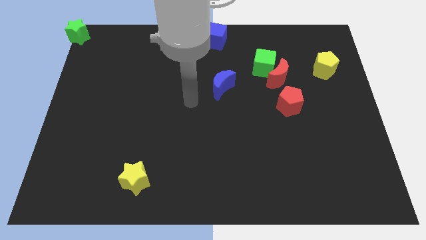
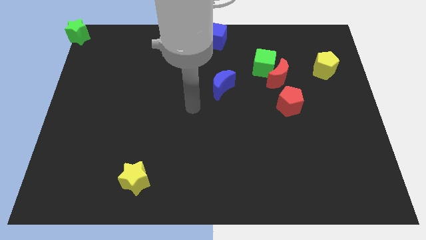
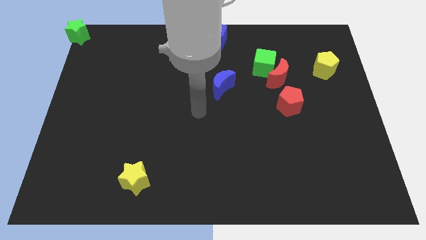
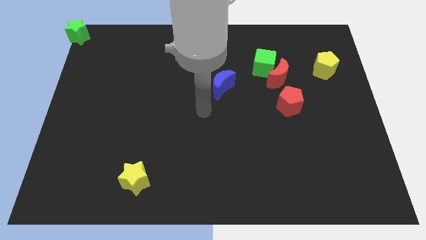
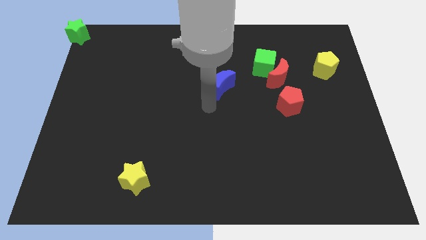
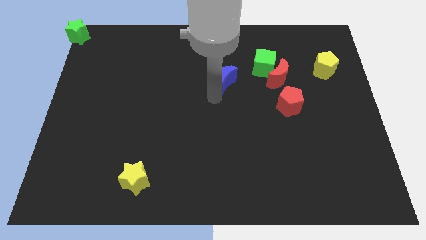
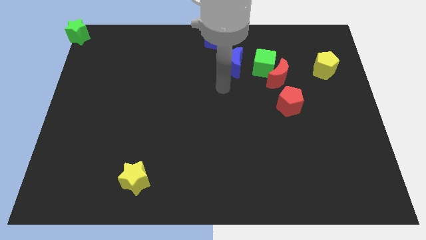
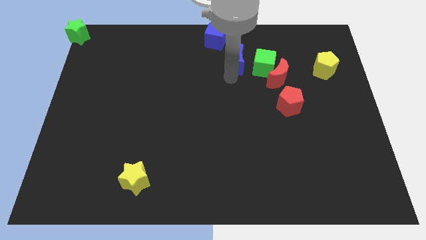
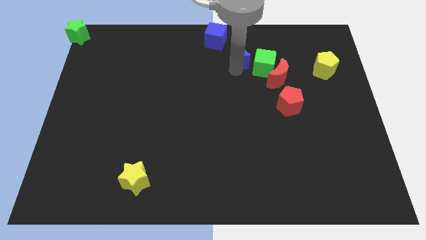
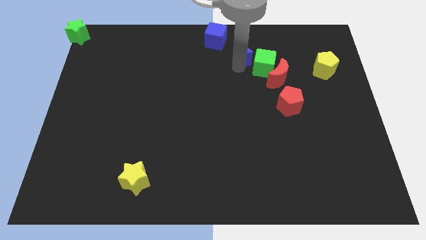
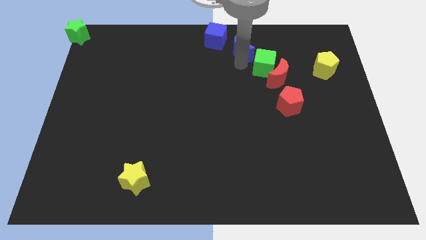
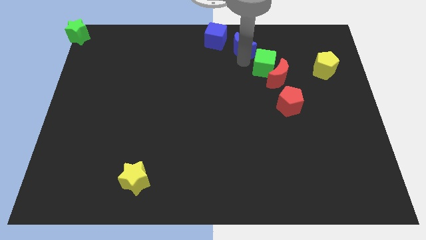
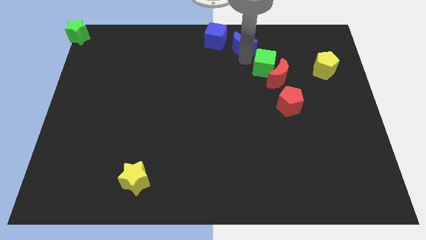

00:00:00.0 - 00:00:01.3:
push the blue crescent to the bottom right of the blue cube

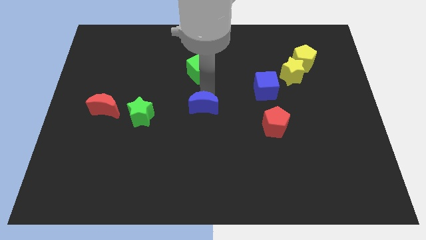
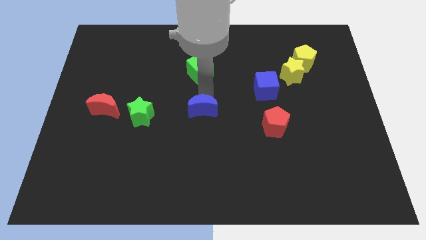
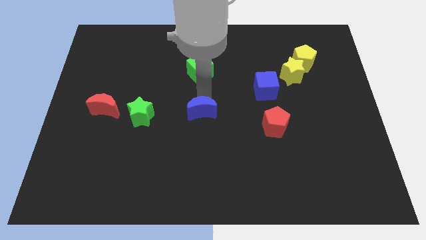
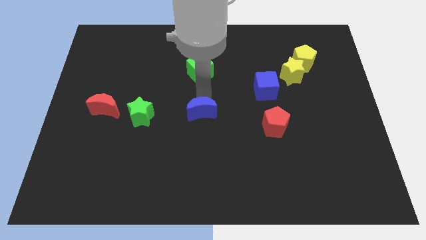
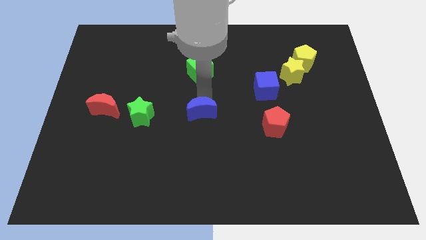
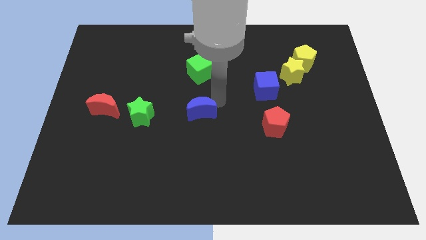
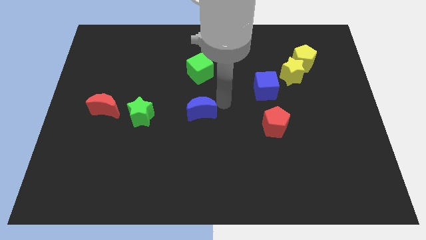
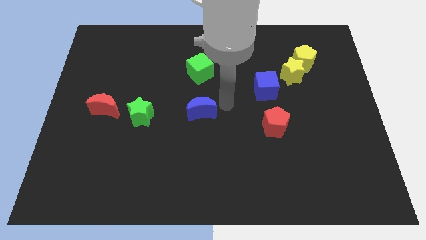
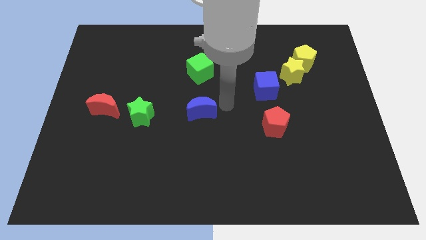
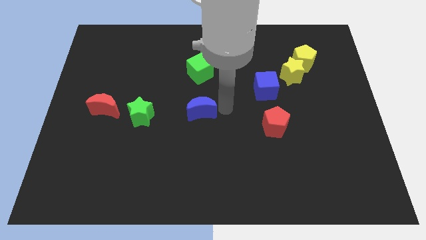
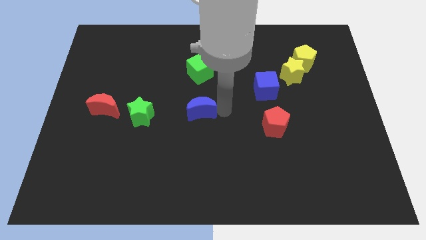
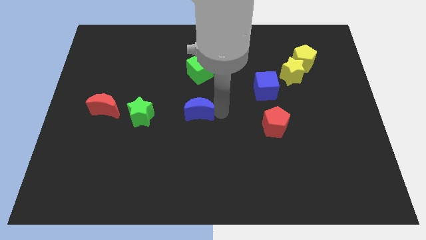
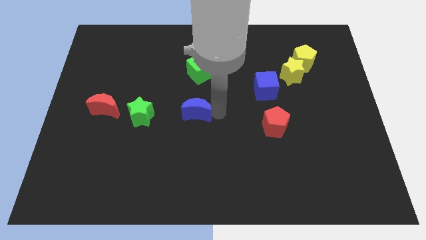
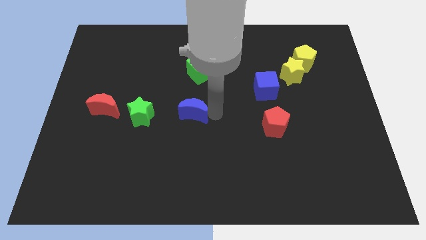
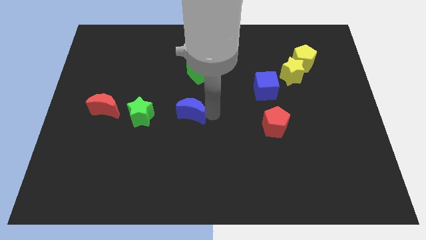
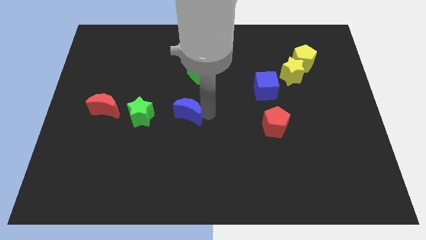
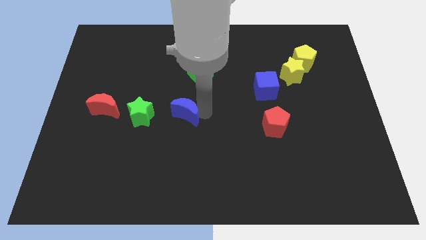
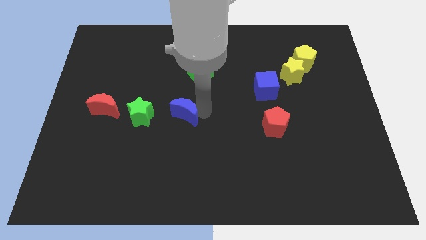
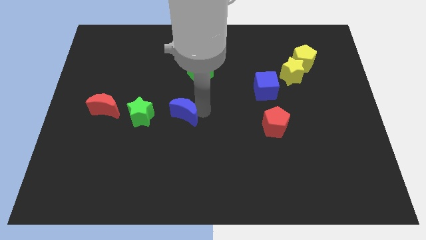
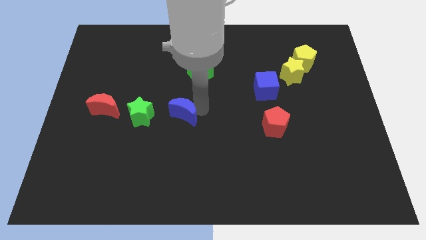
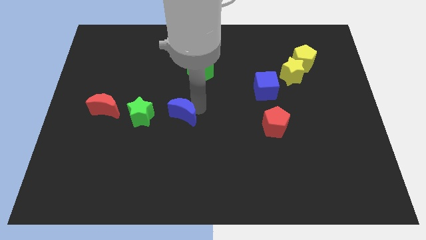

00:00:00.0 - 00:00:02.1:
move blue moon towards green star

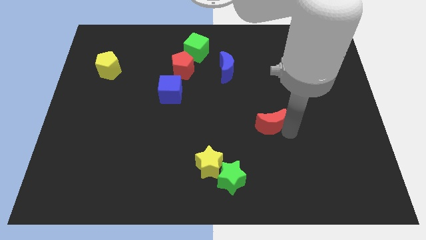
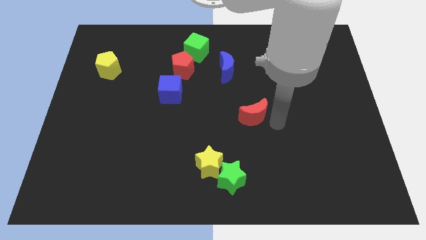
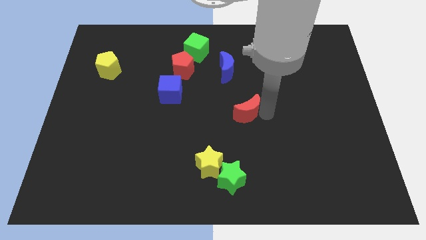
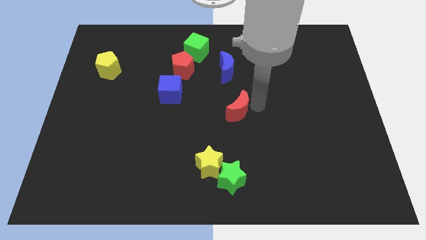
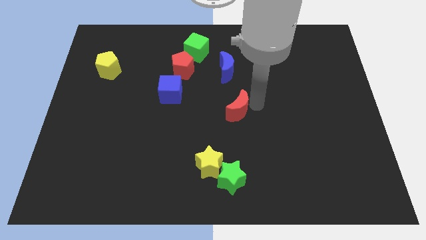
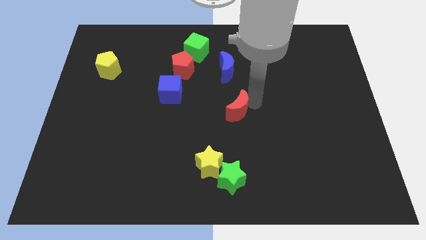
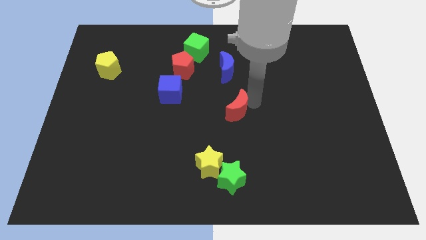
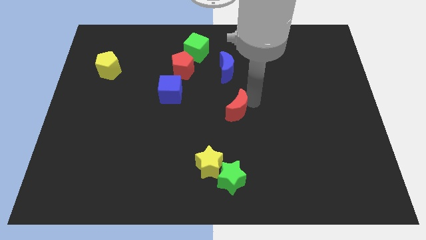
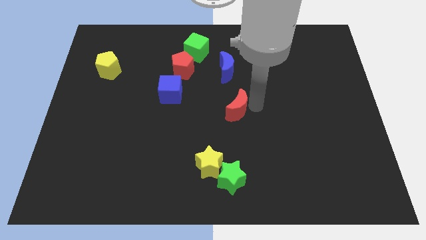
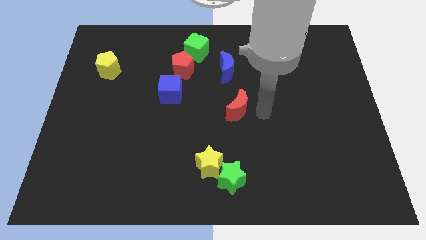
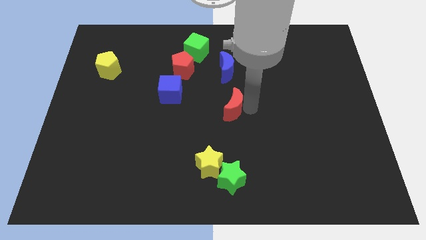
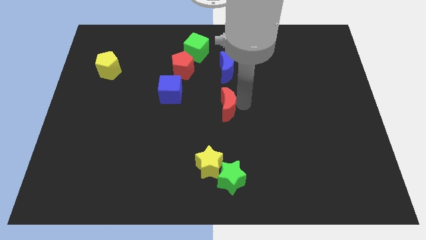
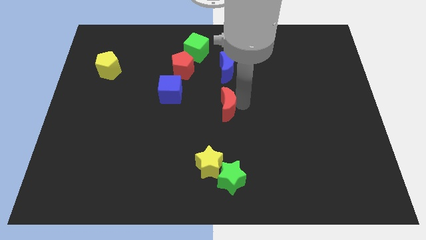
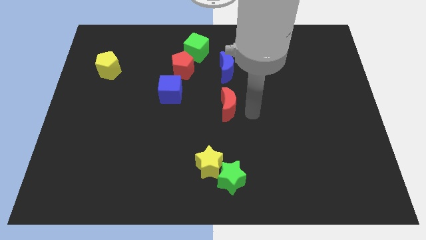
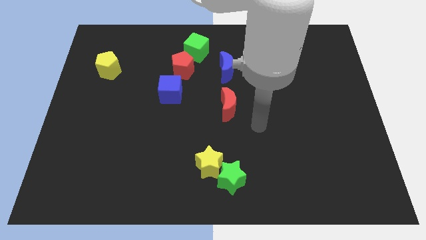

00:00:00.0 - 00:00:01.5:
place the red crescent below to the blue crescent

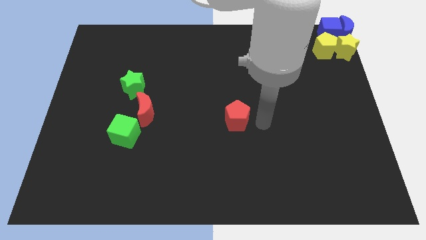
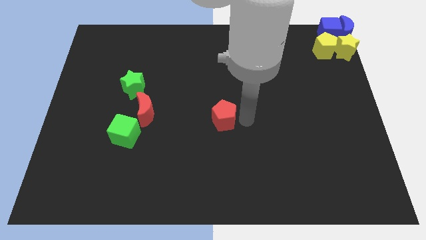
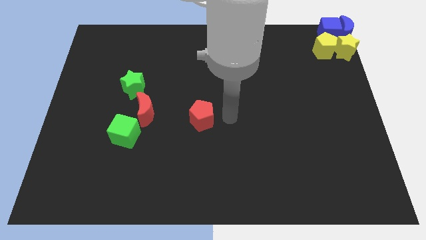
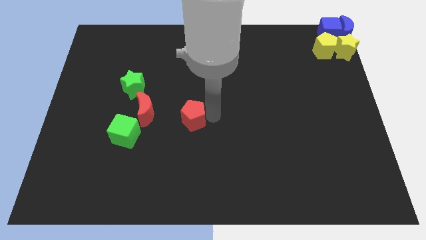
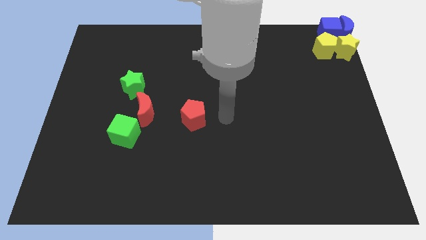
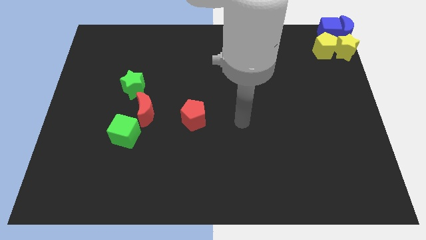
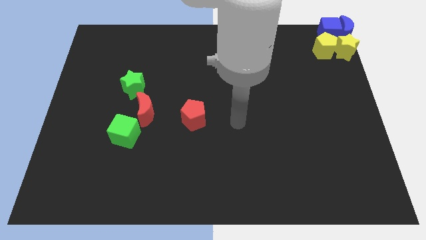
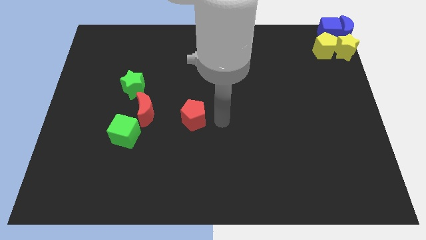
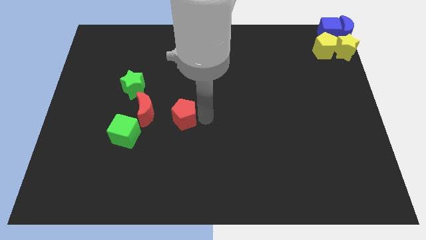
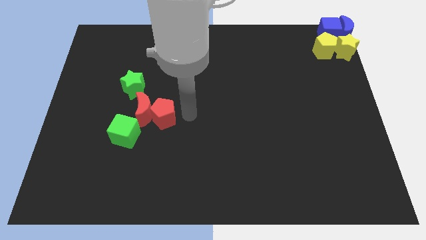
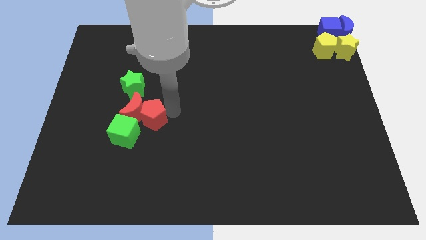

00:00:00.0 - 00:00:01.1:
push red pentagon to the right of red moon

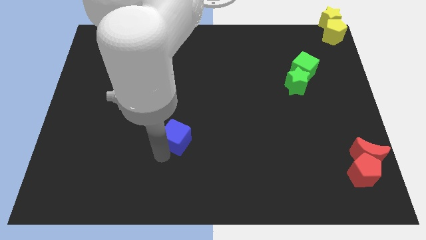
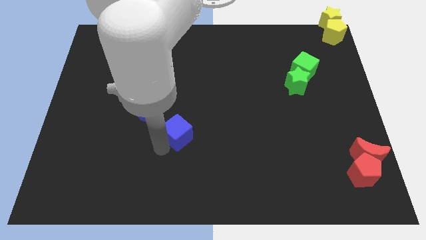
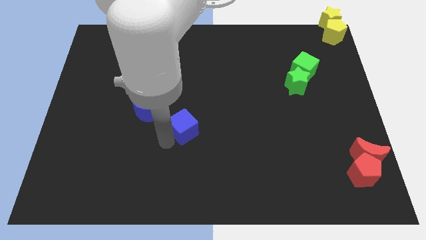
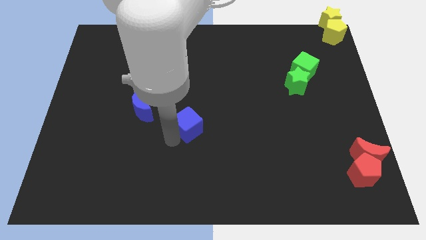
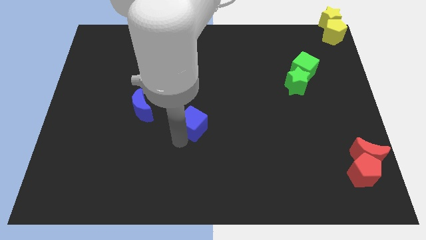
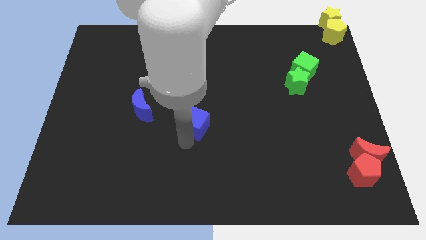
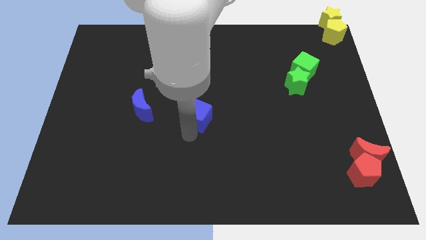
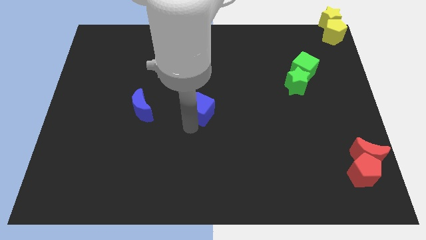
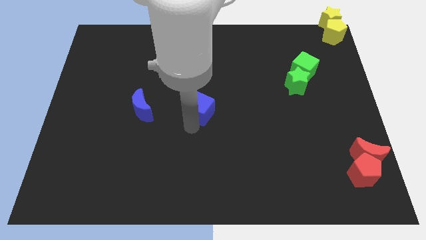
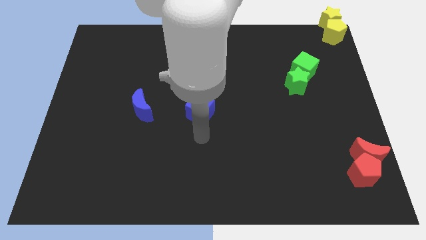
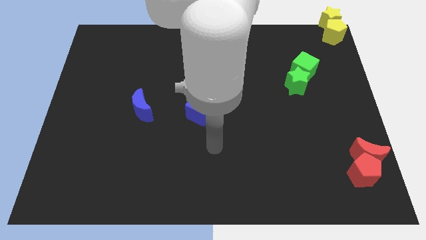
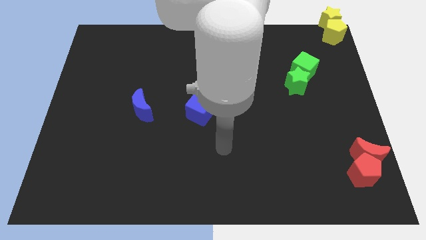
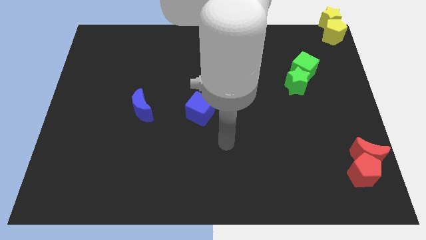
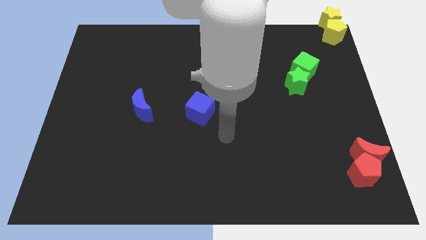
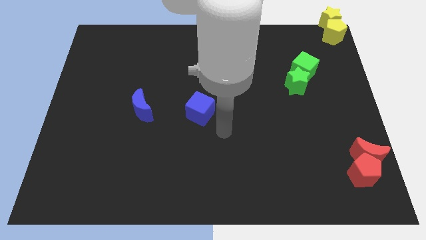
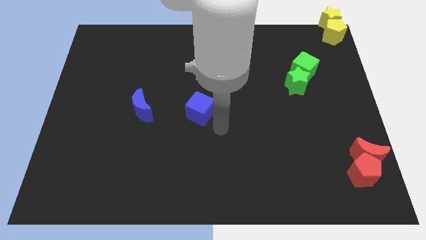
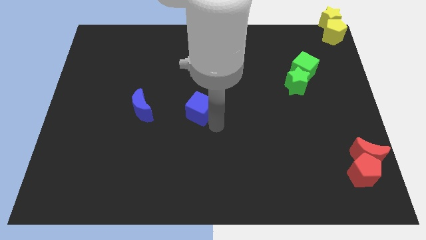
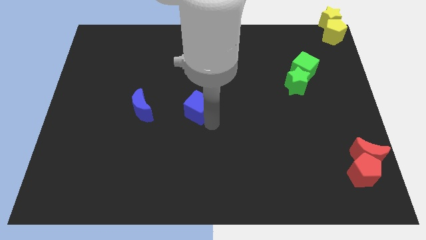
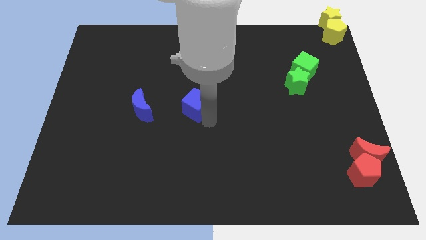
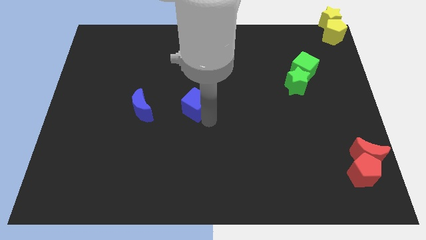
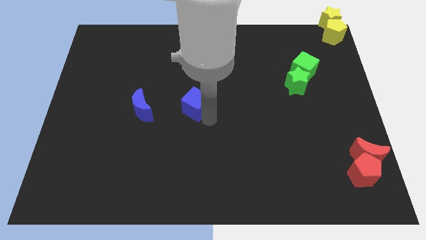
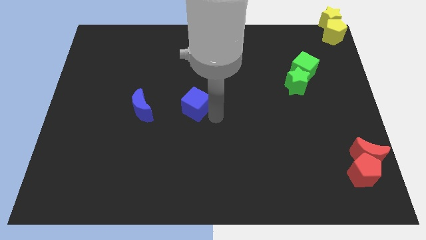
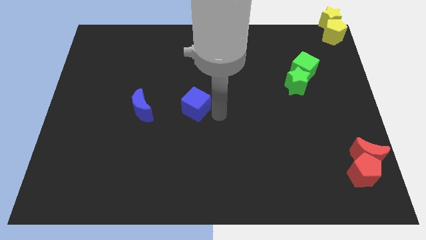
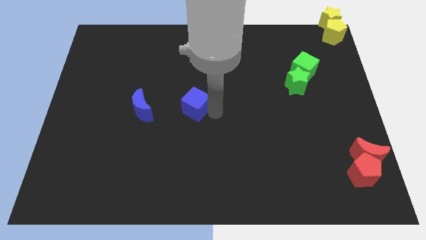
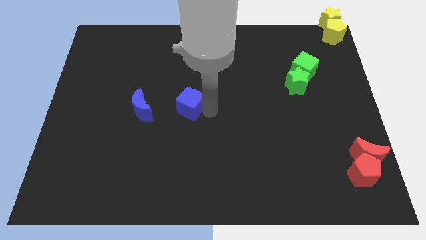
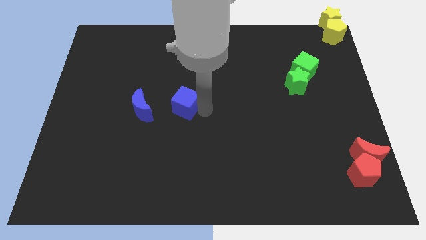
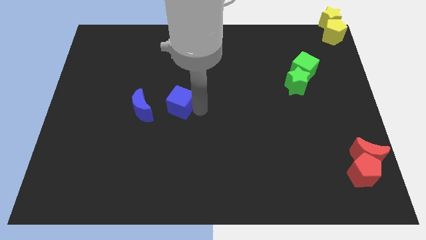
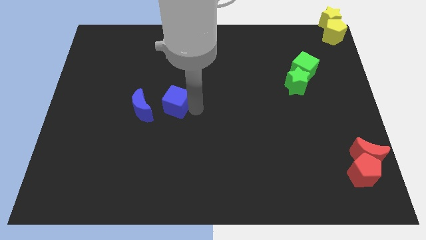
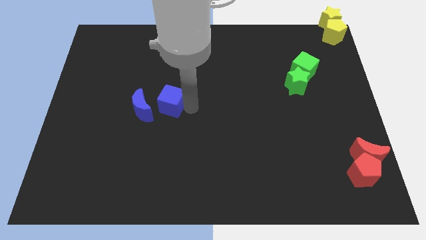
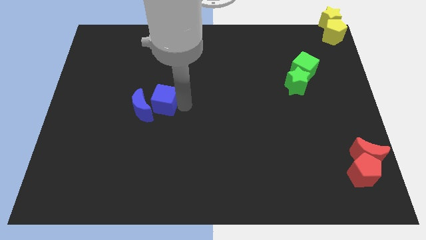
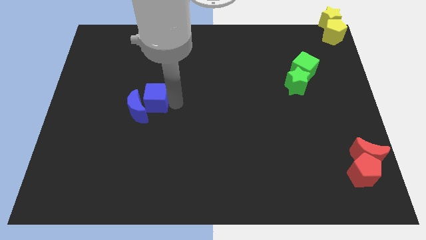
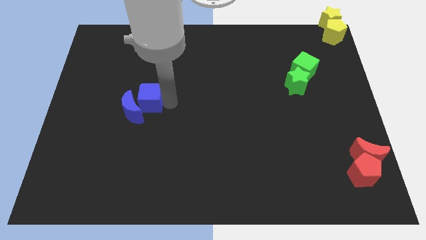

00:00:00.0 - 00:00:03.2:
push the blue into the right side of the blue moon
